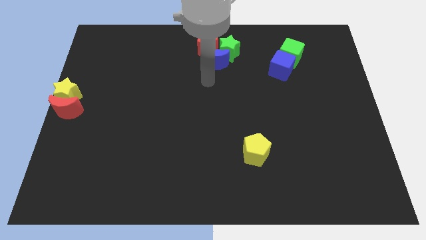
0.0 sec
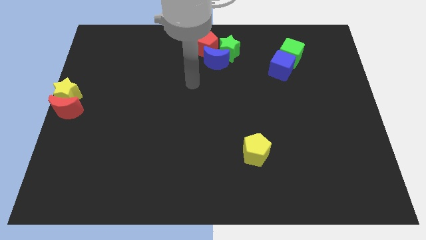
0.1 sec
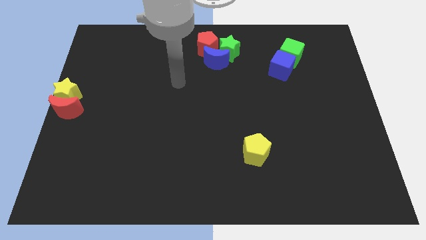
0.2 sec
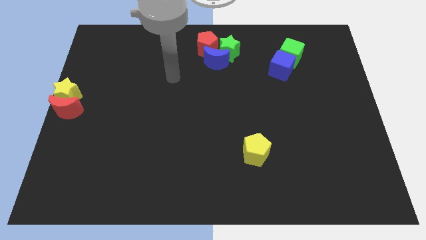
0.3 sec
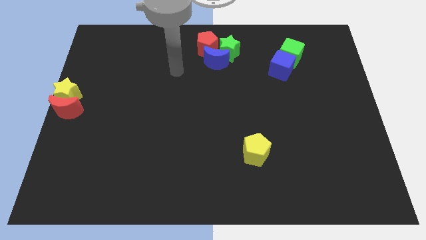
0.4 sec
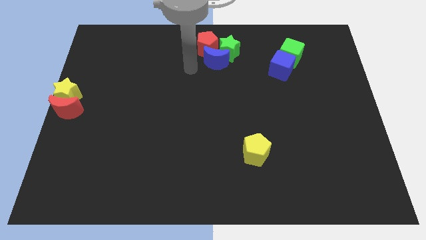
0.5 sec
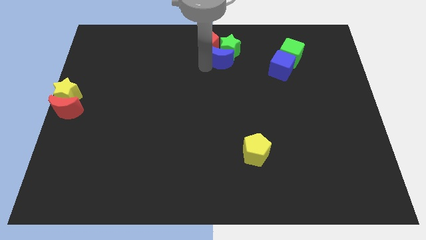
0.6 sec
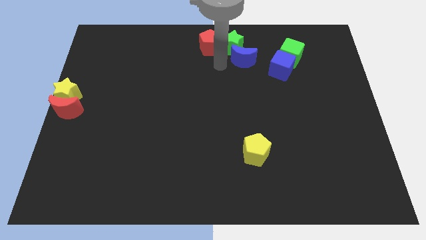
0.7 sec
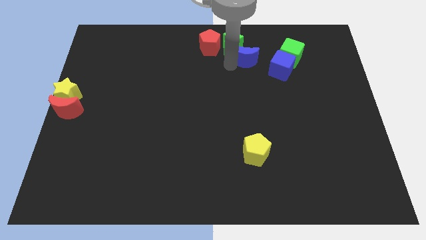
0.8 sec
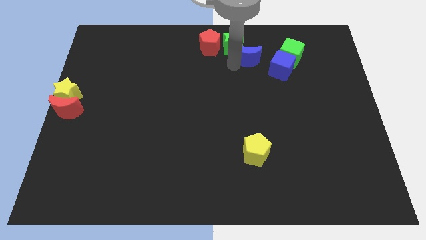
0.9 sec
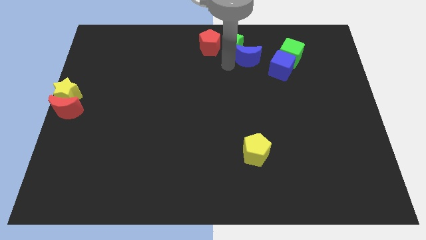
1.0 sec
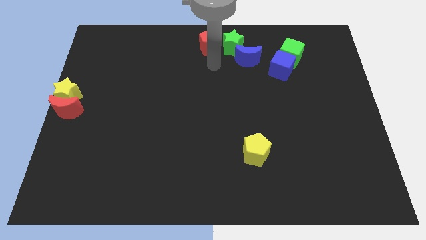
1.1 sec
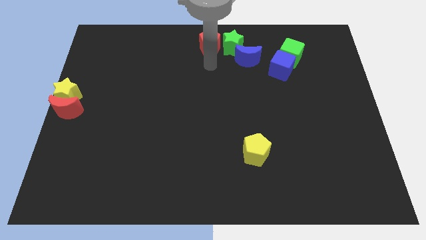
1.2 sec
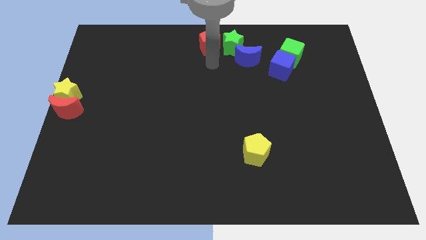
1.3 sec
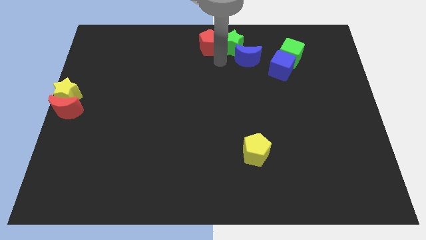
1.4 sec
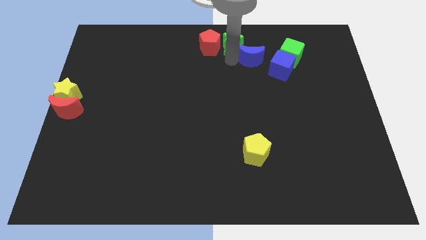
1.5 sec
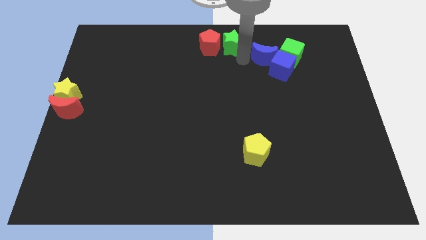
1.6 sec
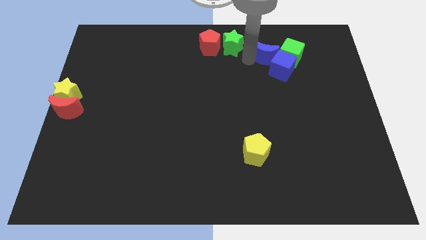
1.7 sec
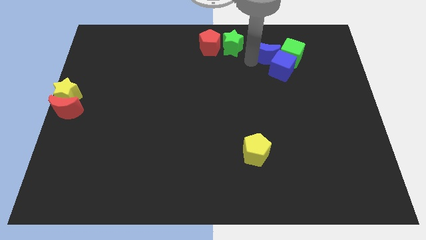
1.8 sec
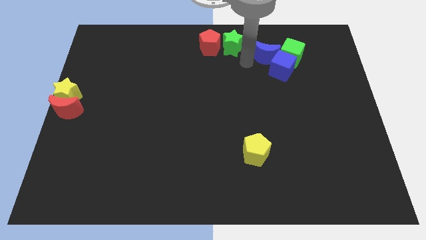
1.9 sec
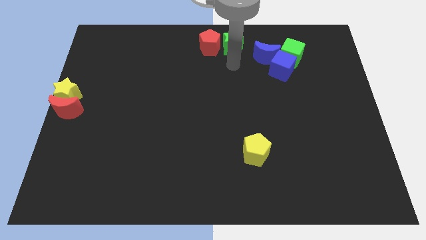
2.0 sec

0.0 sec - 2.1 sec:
move the blue moon into the green cube

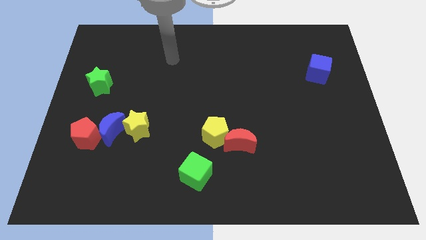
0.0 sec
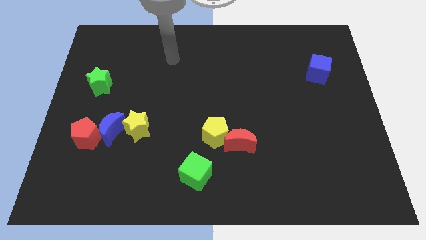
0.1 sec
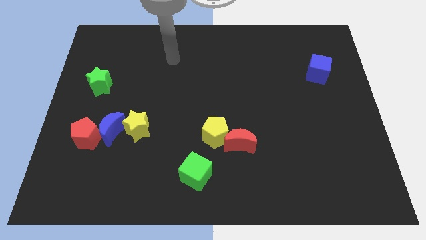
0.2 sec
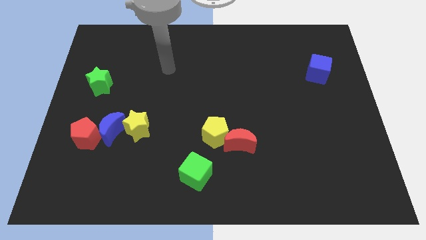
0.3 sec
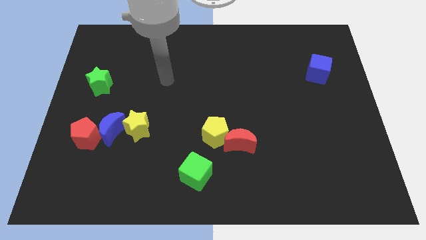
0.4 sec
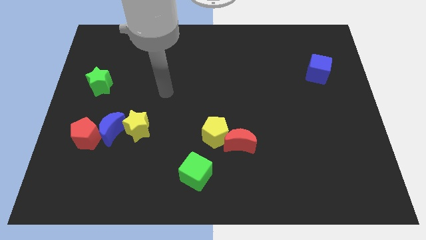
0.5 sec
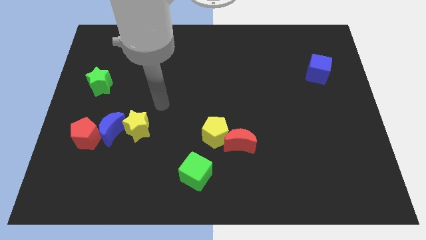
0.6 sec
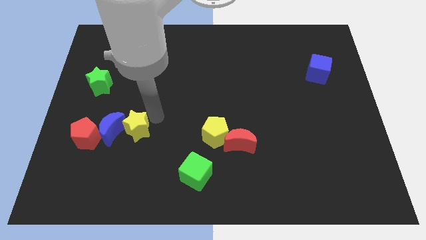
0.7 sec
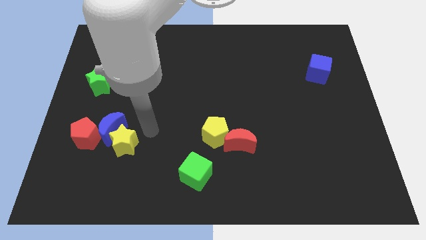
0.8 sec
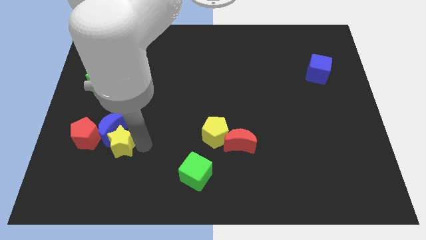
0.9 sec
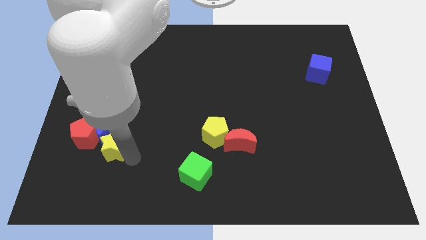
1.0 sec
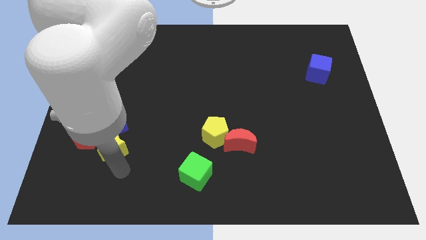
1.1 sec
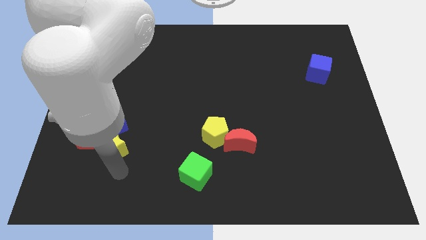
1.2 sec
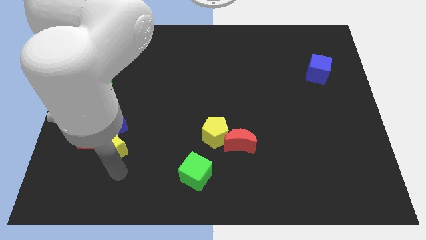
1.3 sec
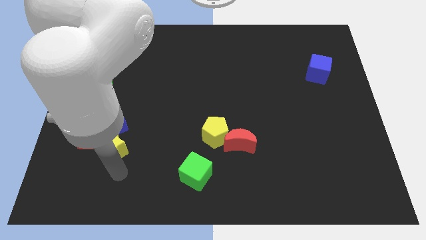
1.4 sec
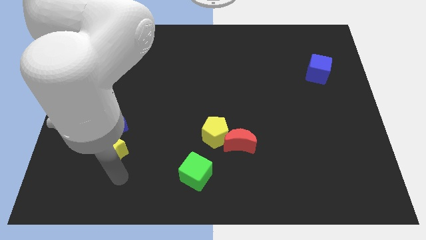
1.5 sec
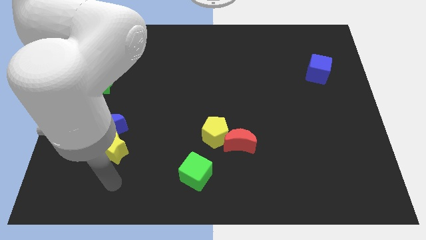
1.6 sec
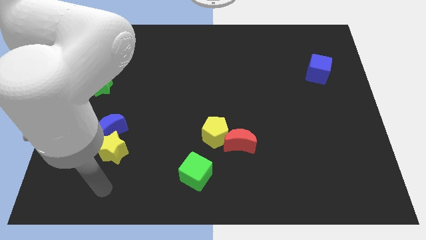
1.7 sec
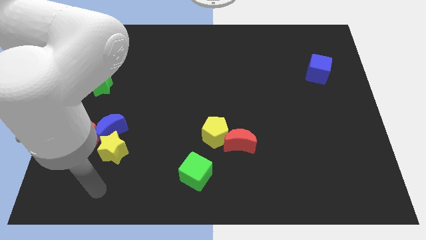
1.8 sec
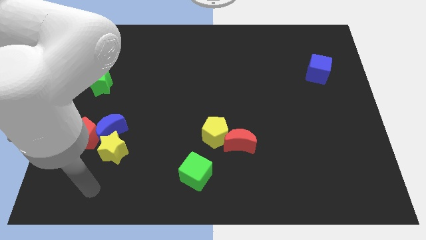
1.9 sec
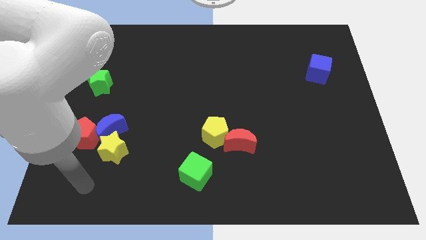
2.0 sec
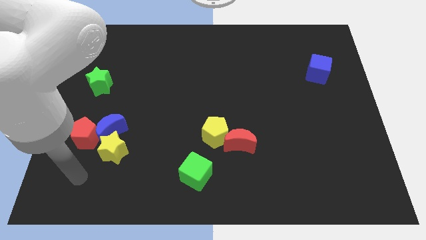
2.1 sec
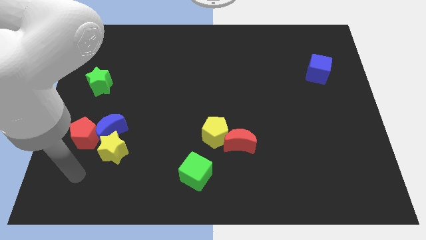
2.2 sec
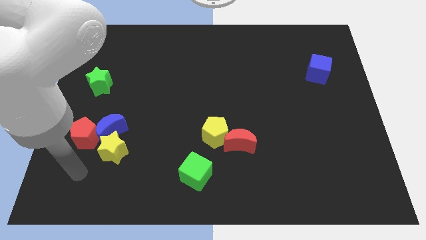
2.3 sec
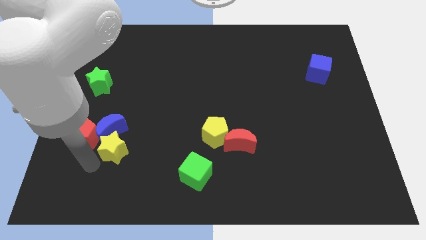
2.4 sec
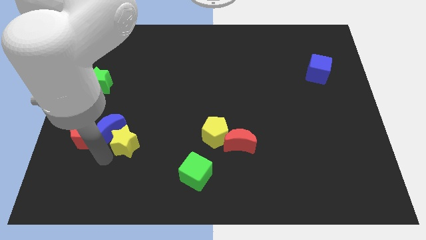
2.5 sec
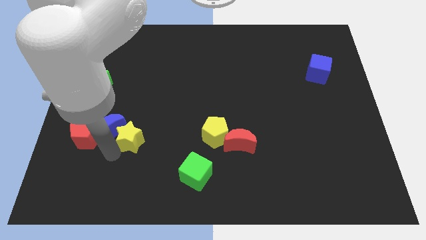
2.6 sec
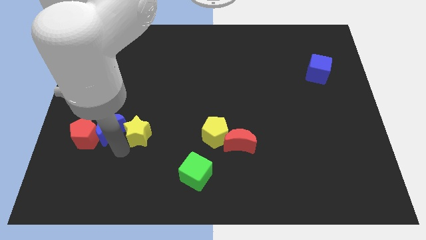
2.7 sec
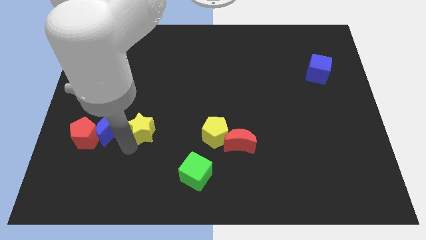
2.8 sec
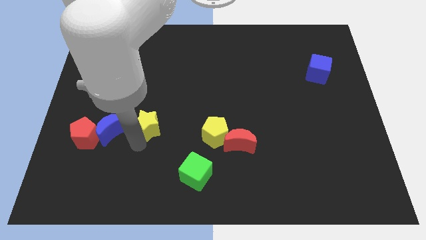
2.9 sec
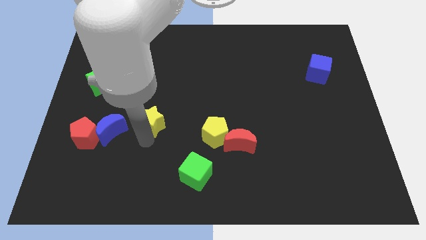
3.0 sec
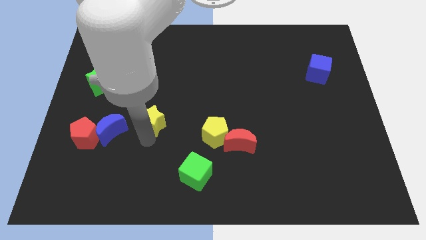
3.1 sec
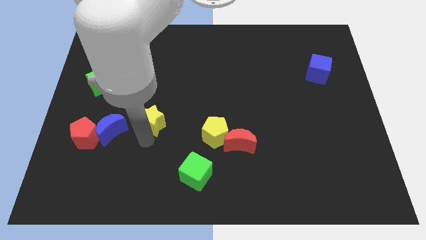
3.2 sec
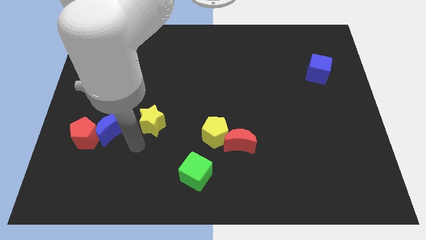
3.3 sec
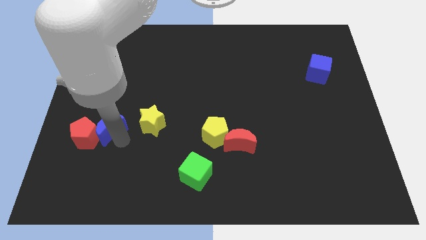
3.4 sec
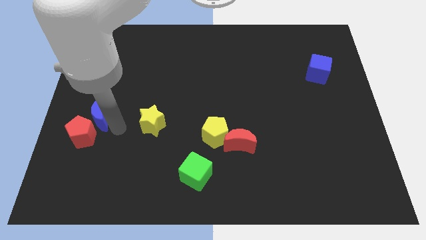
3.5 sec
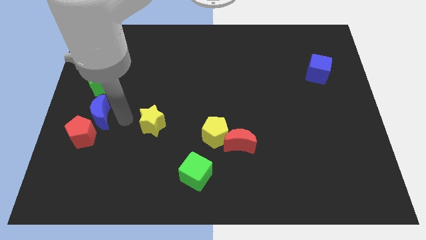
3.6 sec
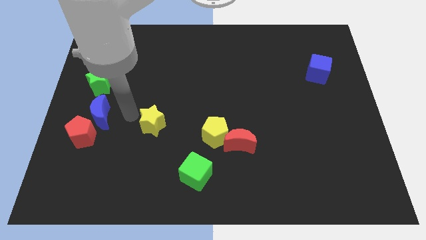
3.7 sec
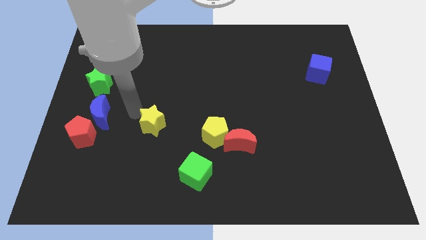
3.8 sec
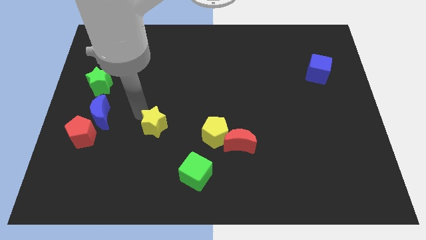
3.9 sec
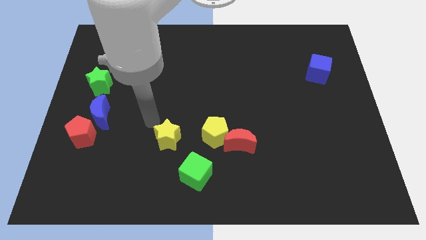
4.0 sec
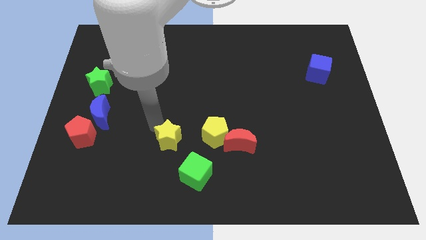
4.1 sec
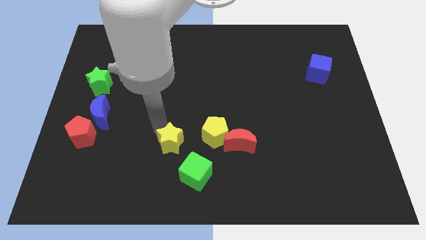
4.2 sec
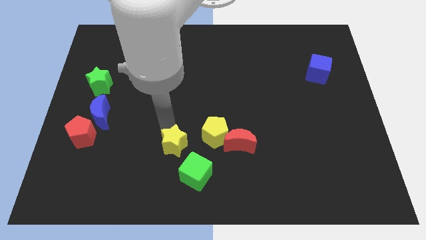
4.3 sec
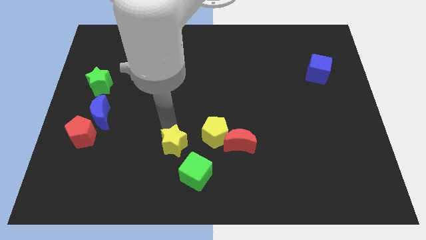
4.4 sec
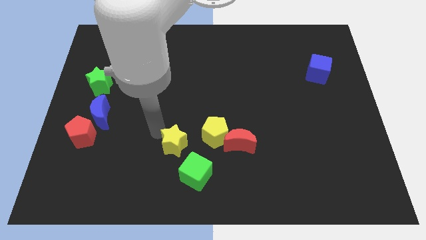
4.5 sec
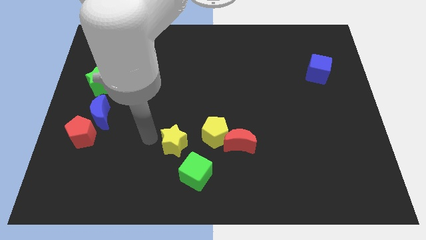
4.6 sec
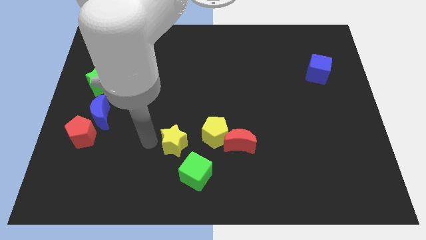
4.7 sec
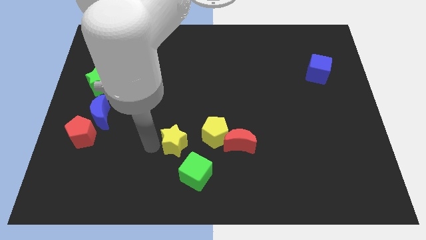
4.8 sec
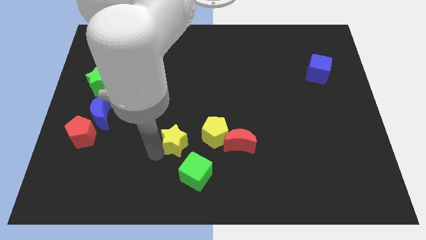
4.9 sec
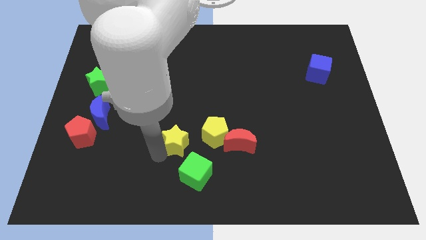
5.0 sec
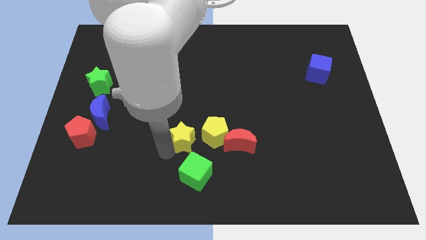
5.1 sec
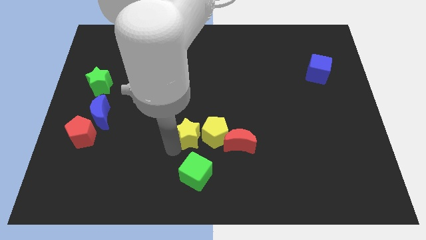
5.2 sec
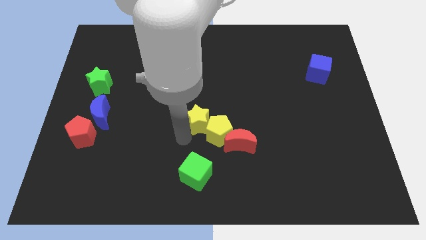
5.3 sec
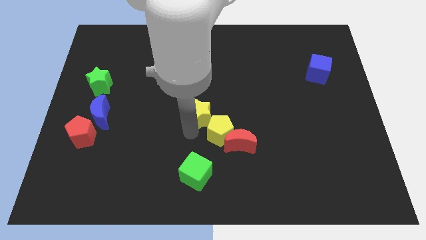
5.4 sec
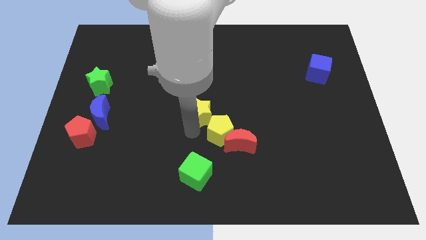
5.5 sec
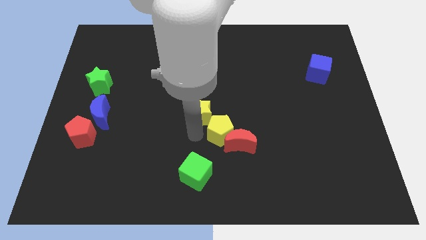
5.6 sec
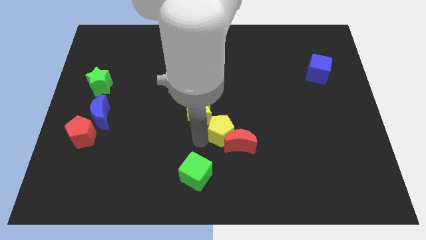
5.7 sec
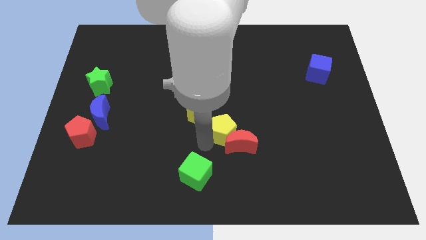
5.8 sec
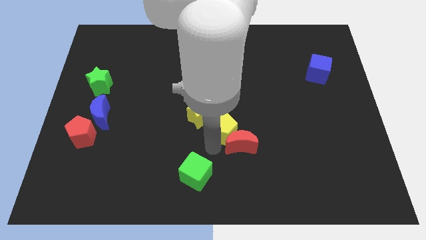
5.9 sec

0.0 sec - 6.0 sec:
move yellow star in to yellow pentagon

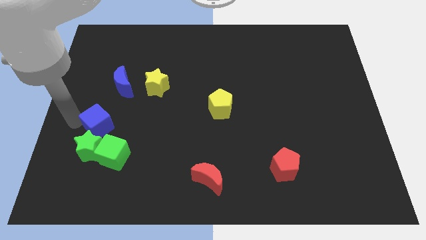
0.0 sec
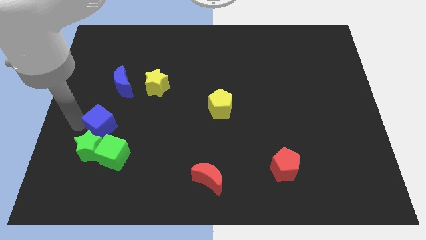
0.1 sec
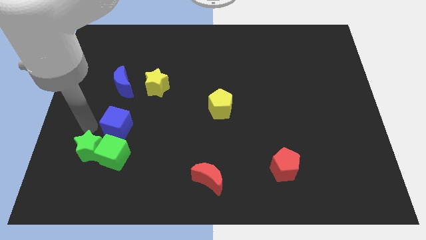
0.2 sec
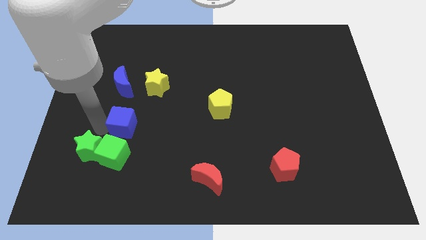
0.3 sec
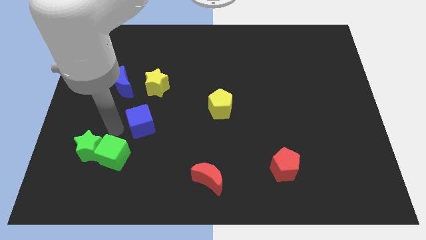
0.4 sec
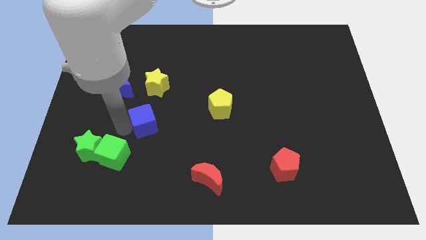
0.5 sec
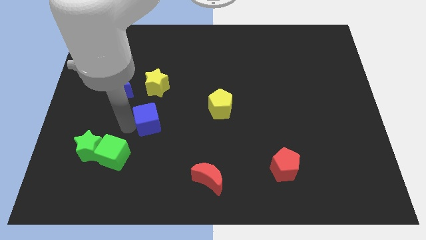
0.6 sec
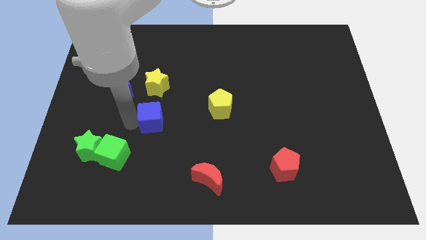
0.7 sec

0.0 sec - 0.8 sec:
separate the blue cube from green star

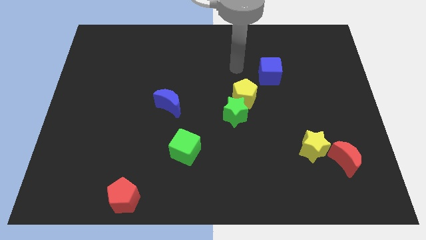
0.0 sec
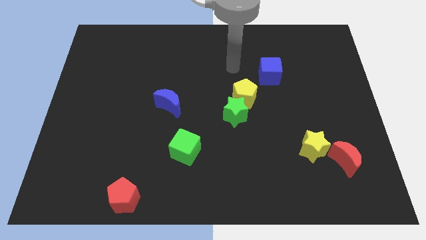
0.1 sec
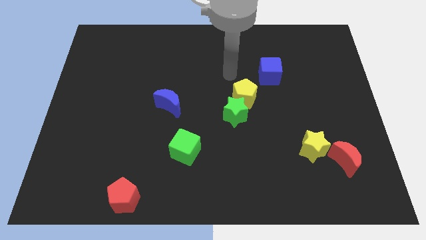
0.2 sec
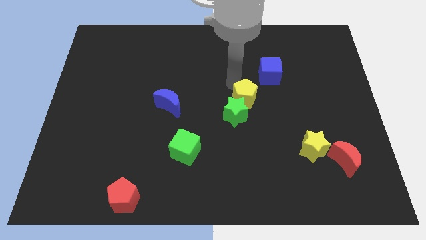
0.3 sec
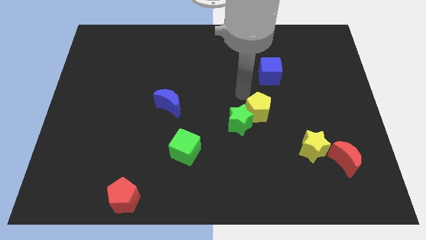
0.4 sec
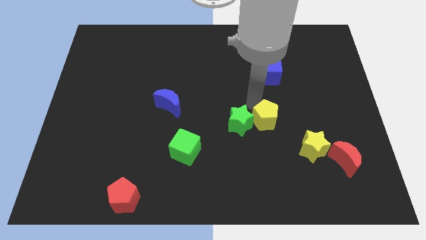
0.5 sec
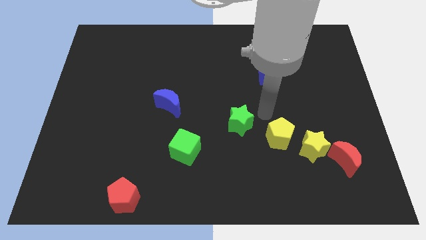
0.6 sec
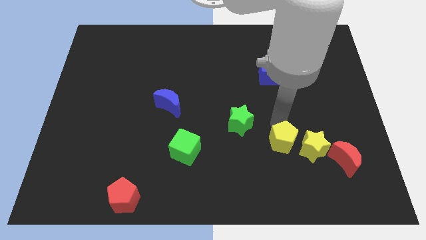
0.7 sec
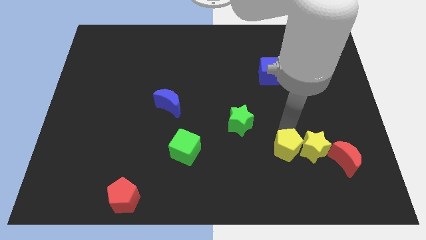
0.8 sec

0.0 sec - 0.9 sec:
move the yellow pentagon to left side of the yellow star
